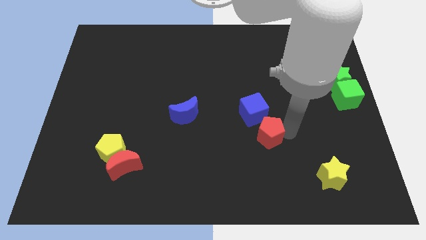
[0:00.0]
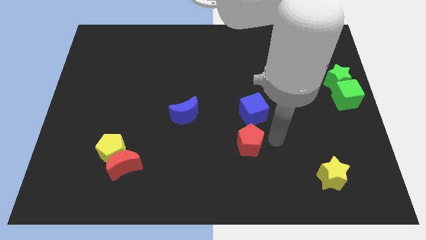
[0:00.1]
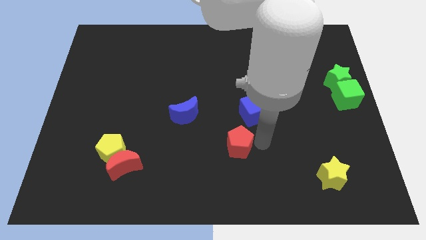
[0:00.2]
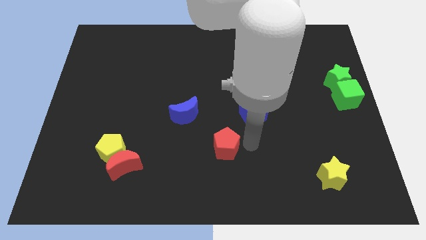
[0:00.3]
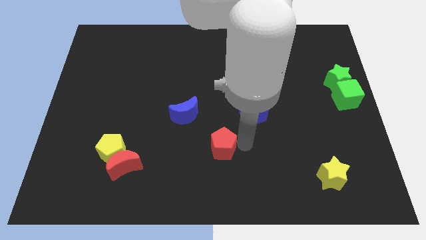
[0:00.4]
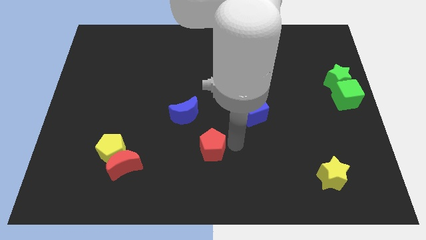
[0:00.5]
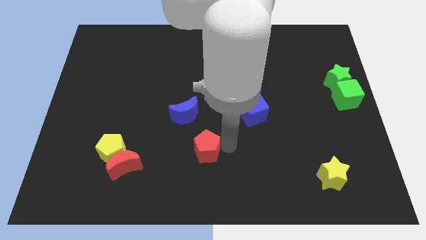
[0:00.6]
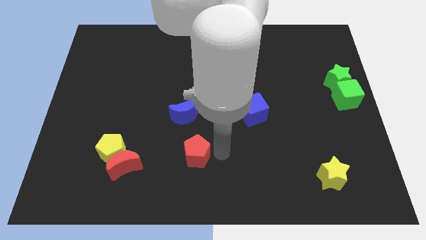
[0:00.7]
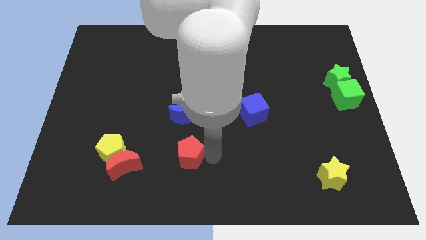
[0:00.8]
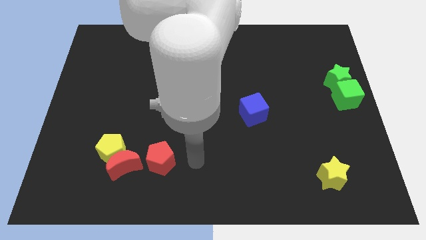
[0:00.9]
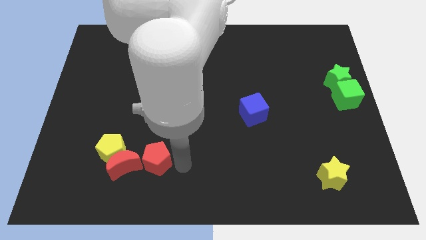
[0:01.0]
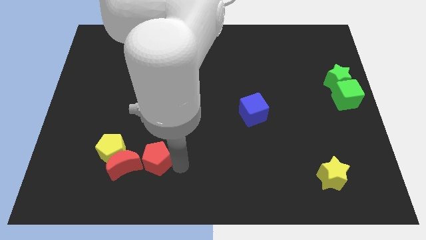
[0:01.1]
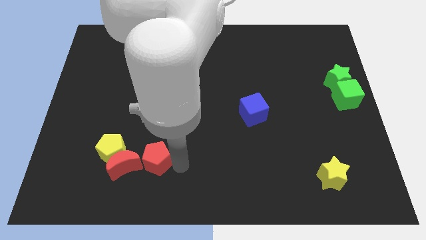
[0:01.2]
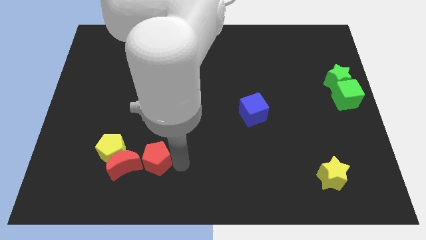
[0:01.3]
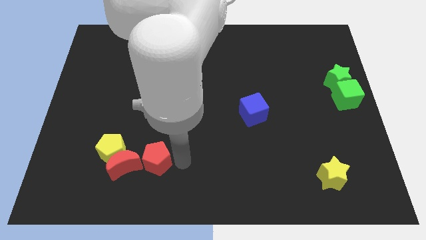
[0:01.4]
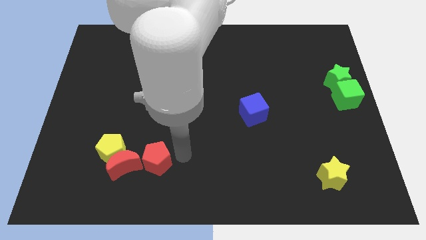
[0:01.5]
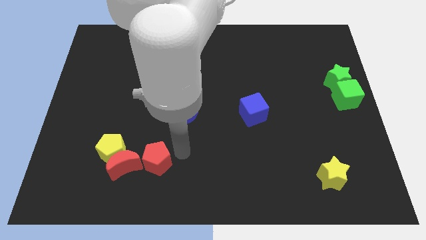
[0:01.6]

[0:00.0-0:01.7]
separate red pentagon from blue cube

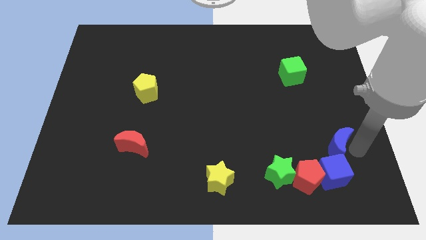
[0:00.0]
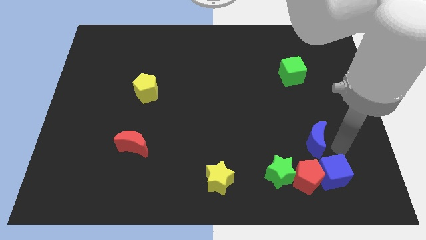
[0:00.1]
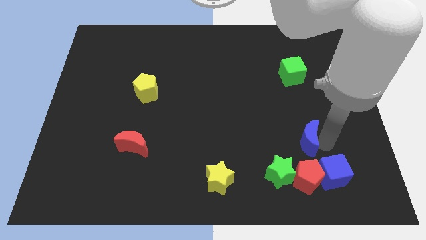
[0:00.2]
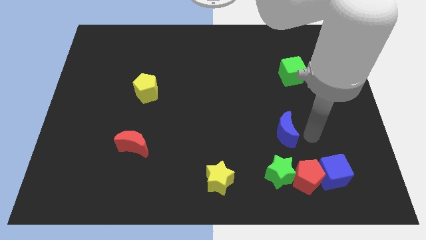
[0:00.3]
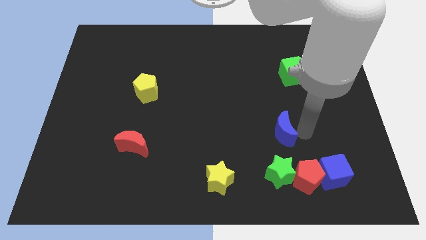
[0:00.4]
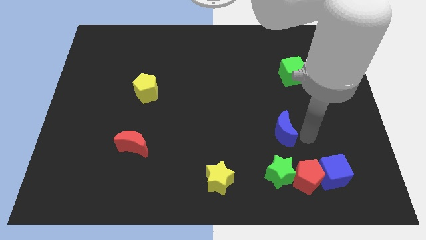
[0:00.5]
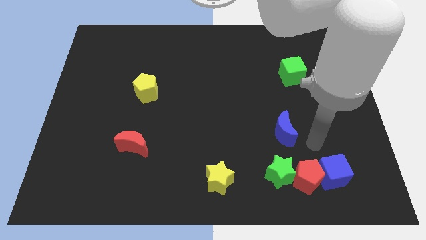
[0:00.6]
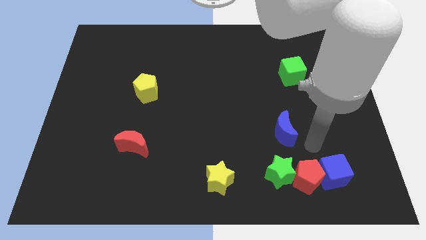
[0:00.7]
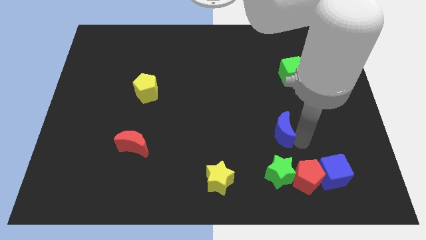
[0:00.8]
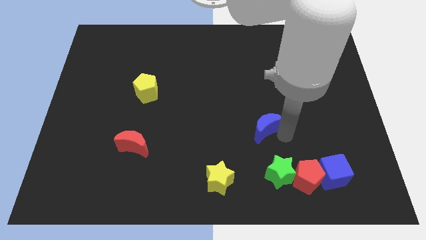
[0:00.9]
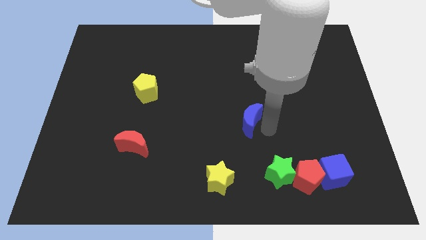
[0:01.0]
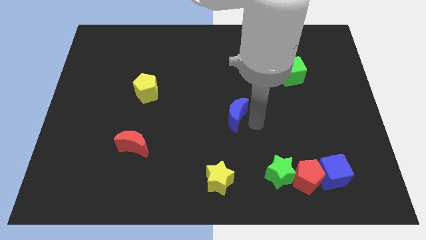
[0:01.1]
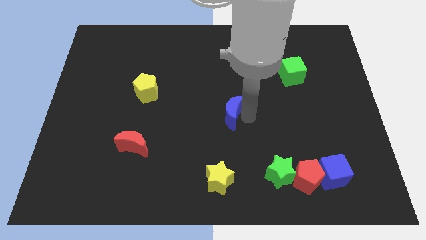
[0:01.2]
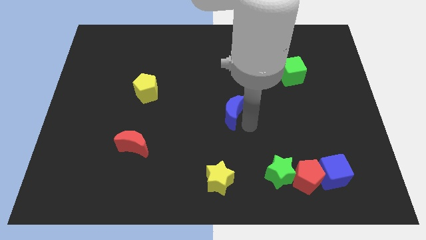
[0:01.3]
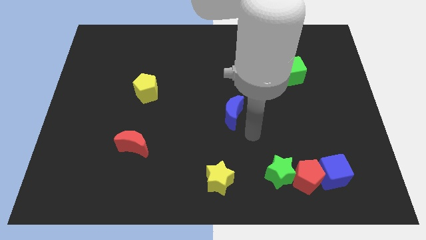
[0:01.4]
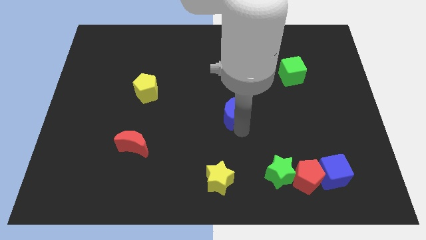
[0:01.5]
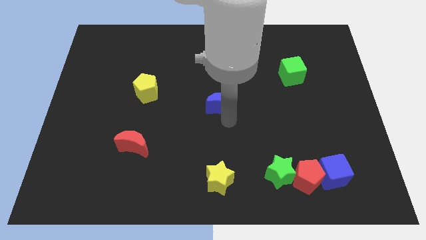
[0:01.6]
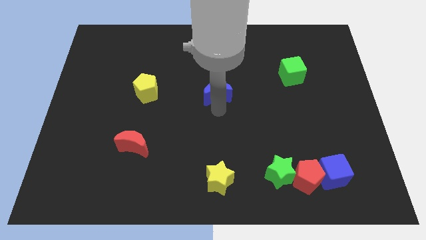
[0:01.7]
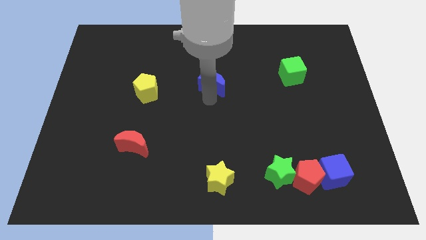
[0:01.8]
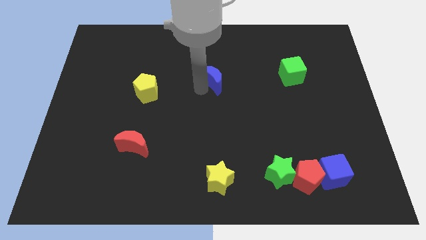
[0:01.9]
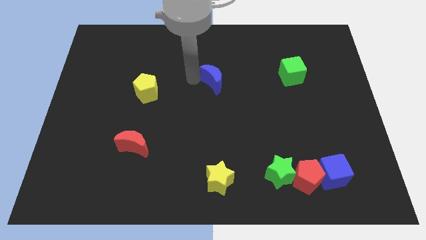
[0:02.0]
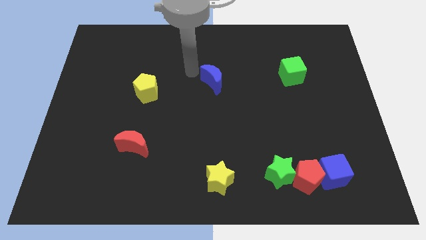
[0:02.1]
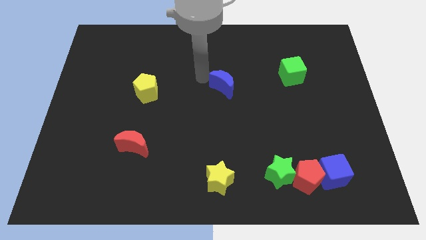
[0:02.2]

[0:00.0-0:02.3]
move the blue moon on top of yellow star

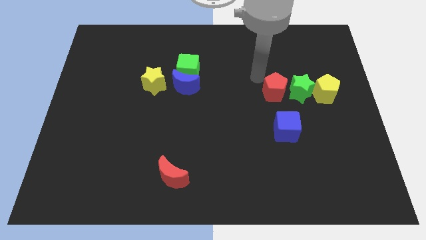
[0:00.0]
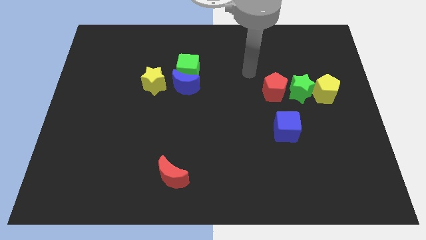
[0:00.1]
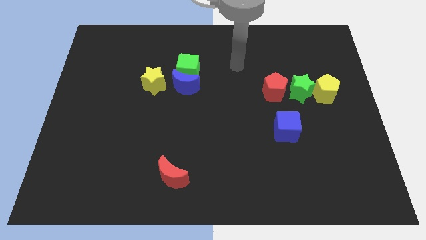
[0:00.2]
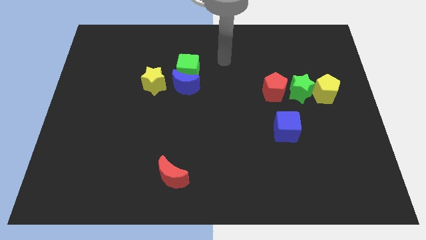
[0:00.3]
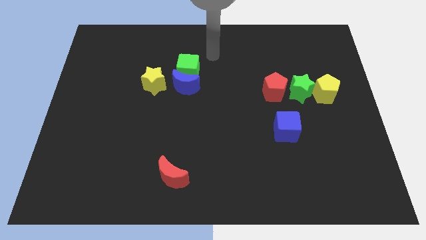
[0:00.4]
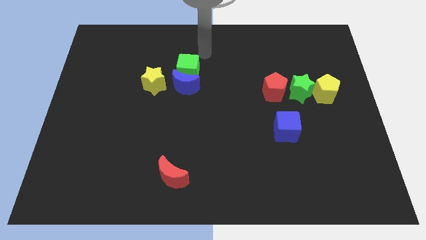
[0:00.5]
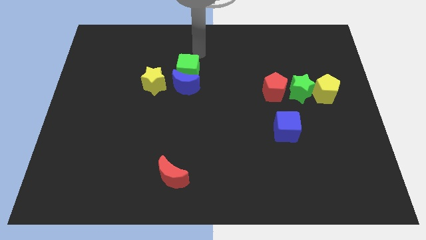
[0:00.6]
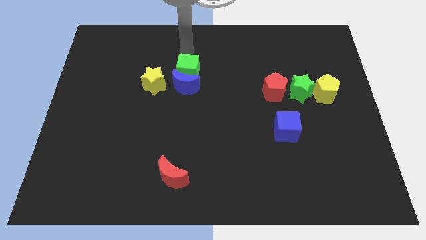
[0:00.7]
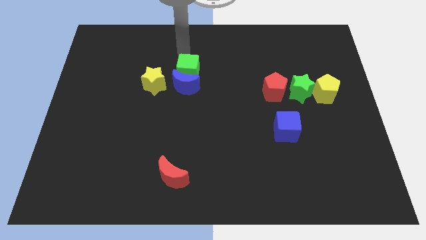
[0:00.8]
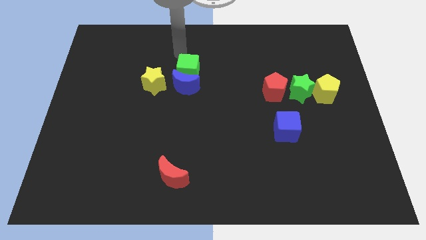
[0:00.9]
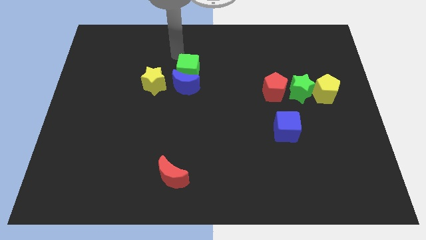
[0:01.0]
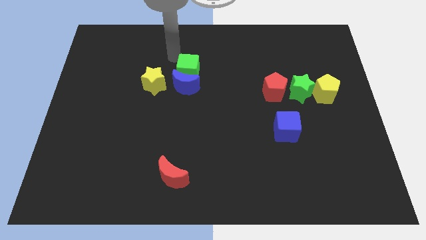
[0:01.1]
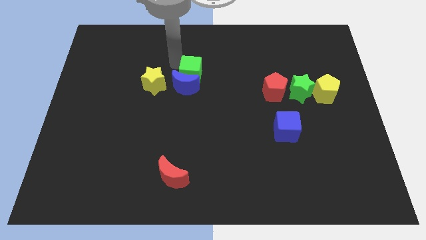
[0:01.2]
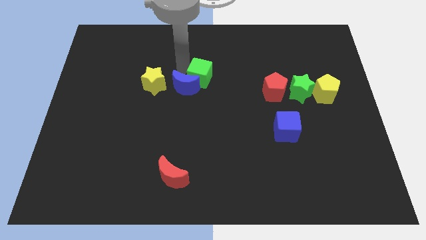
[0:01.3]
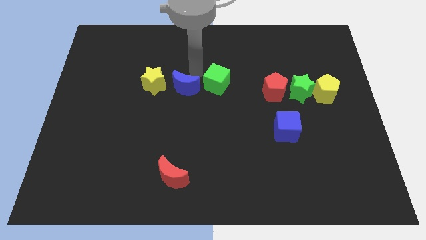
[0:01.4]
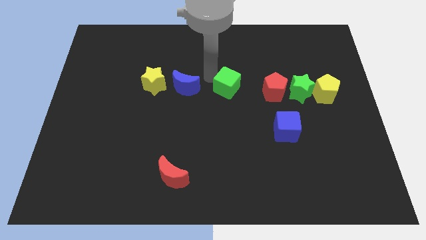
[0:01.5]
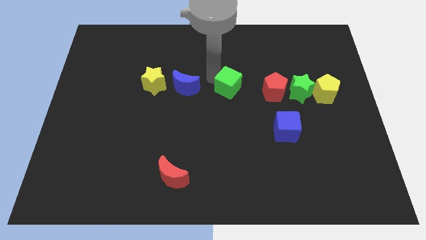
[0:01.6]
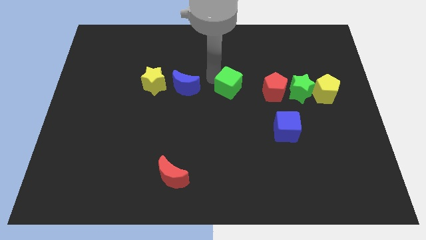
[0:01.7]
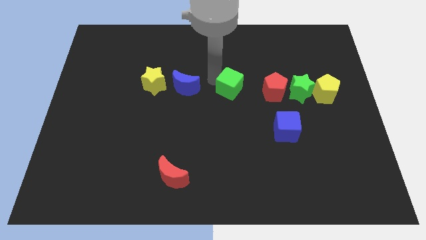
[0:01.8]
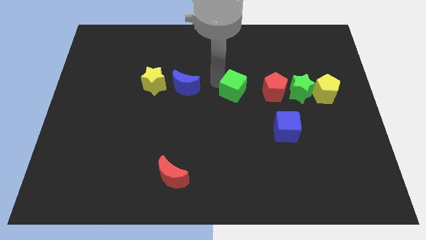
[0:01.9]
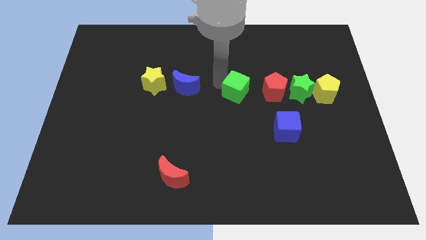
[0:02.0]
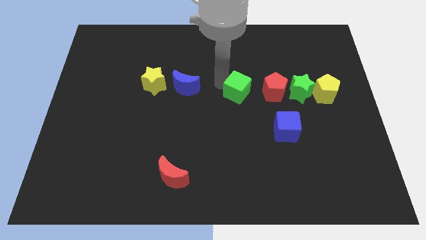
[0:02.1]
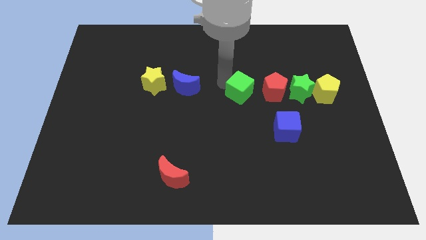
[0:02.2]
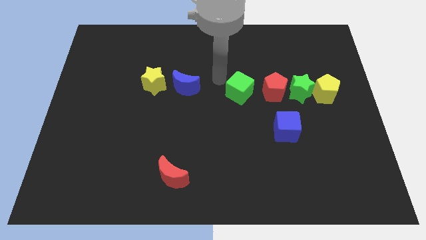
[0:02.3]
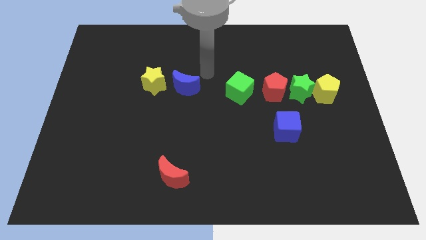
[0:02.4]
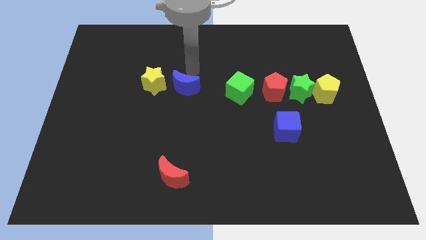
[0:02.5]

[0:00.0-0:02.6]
move the green cube parallel left to the red pentagon

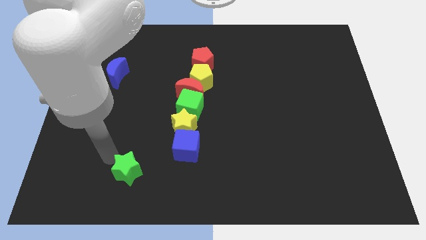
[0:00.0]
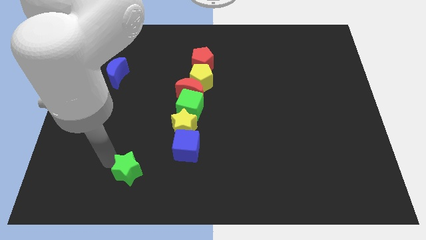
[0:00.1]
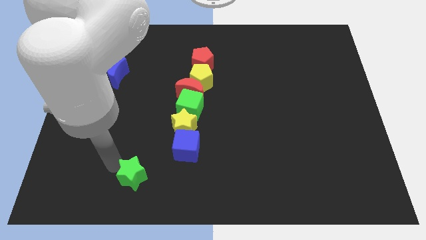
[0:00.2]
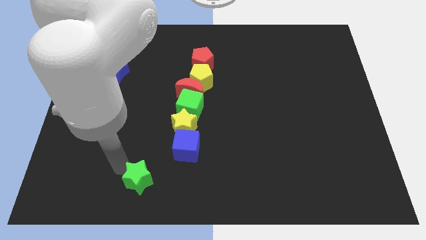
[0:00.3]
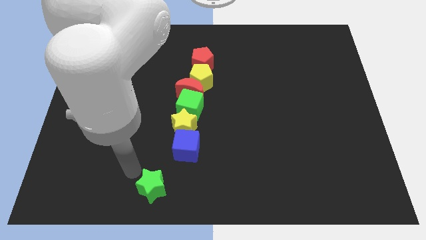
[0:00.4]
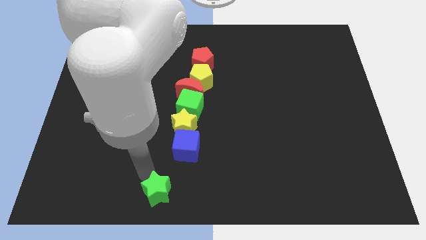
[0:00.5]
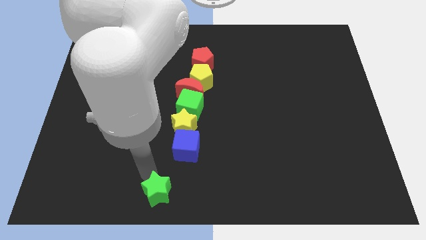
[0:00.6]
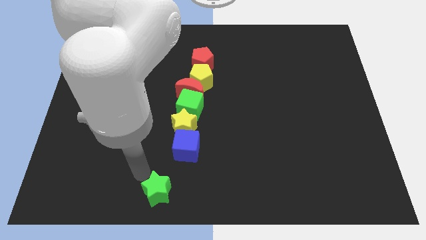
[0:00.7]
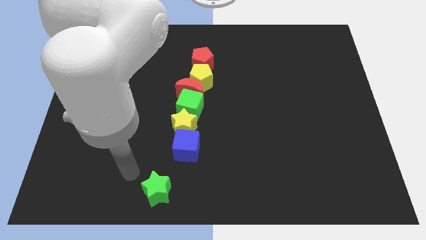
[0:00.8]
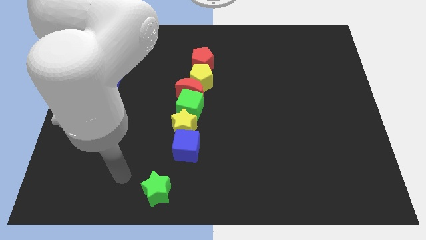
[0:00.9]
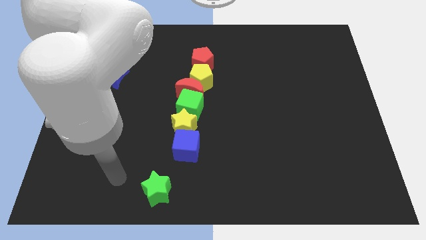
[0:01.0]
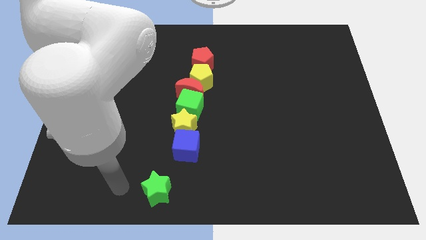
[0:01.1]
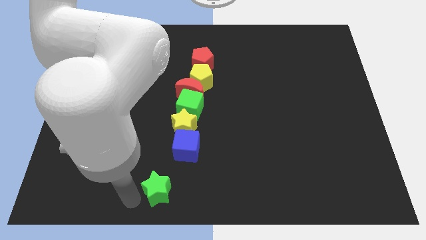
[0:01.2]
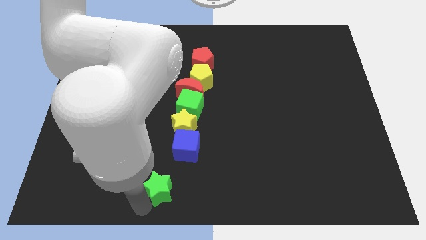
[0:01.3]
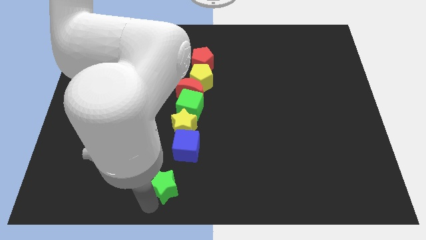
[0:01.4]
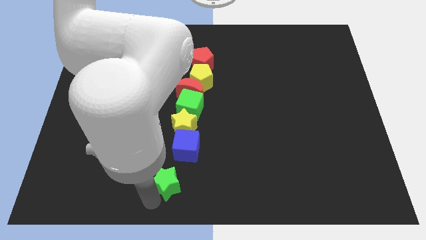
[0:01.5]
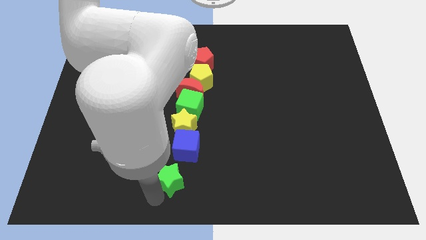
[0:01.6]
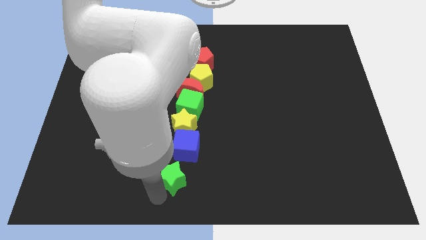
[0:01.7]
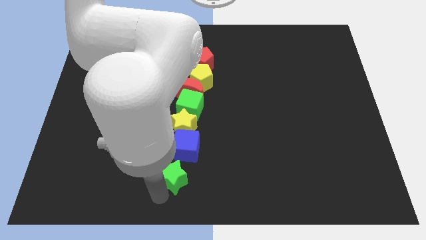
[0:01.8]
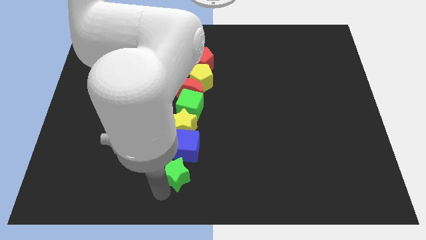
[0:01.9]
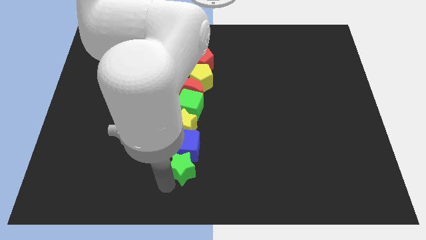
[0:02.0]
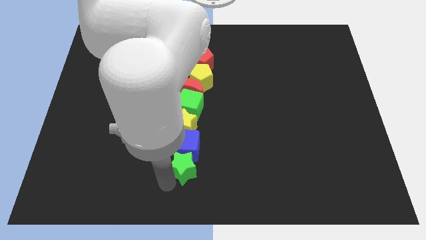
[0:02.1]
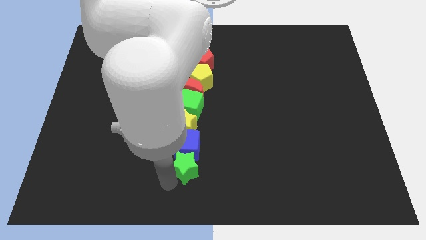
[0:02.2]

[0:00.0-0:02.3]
push the green star into the blue cube

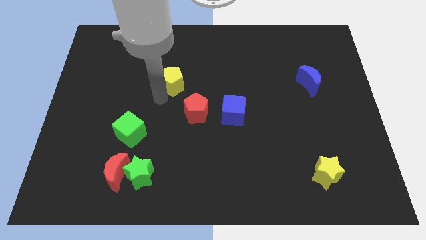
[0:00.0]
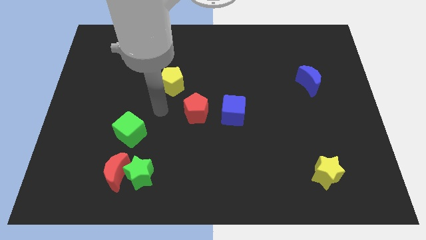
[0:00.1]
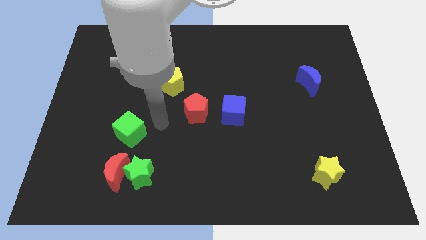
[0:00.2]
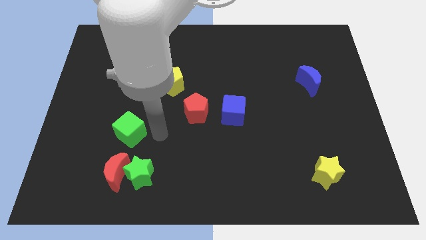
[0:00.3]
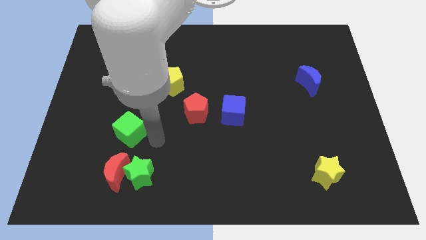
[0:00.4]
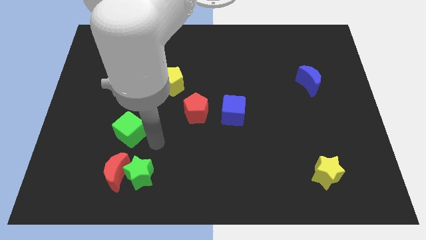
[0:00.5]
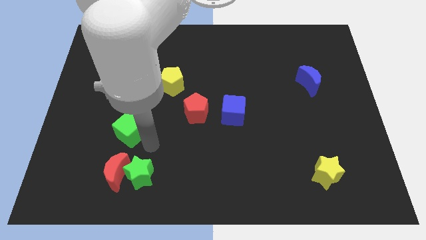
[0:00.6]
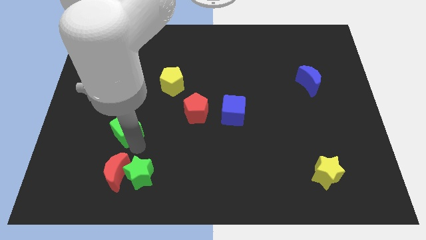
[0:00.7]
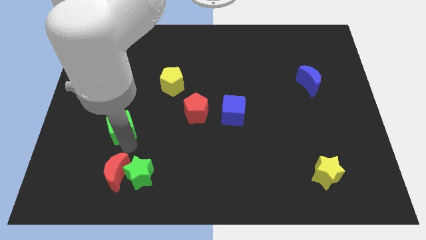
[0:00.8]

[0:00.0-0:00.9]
tap the green cube
